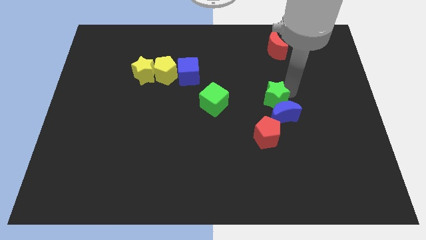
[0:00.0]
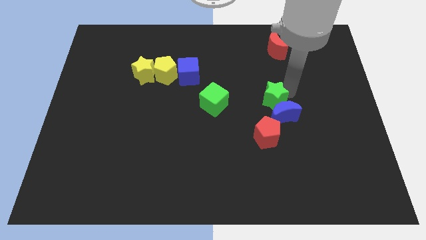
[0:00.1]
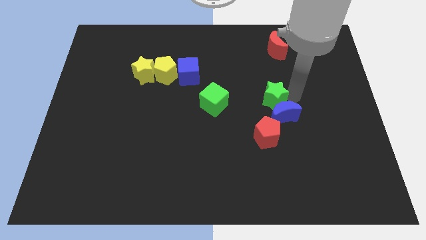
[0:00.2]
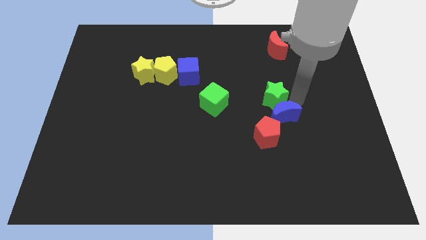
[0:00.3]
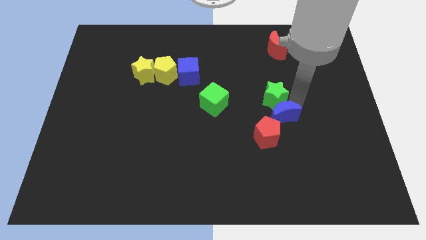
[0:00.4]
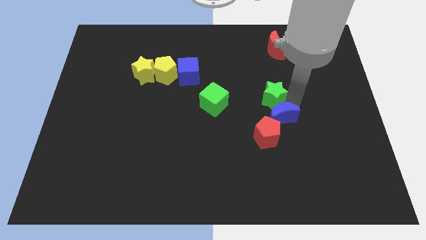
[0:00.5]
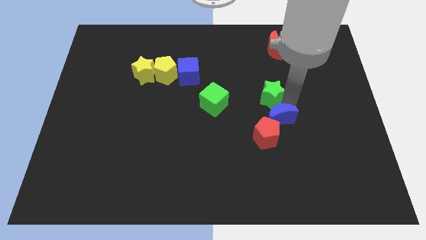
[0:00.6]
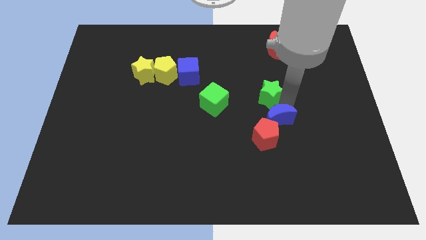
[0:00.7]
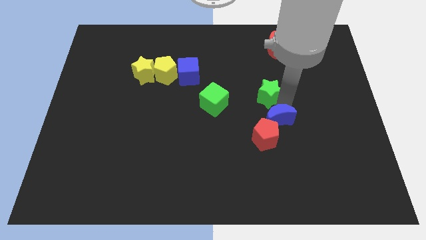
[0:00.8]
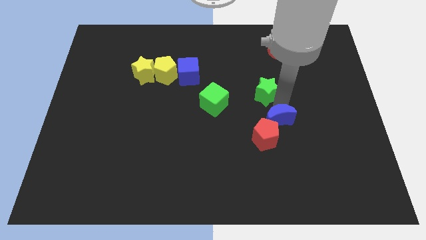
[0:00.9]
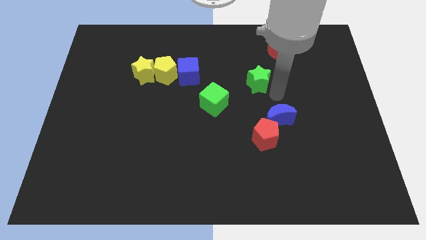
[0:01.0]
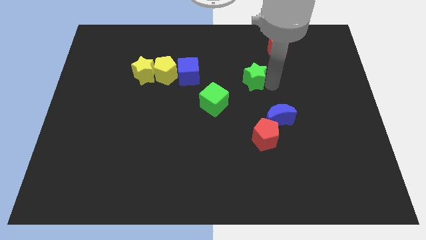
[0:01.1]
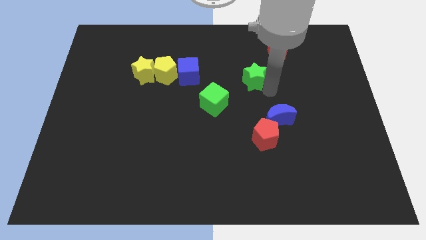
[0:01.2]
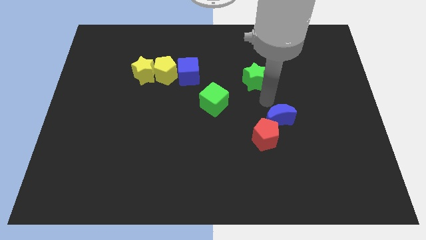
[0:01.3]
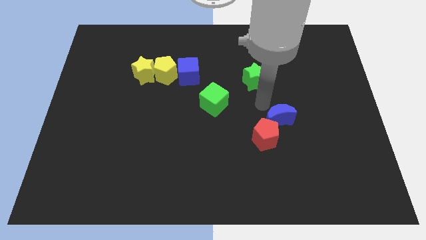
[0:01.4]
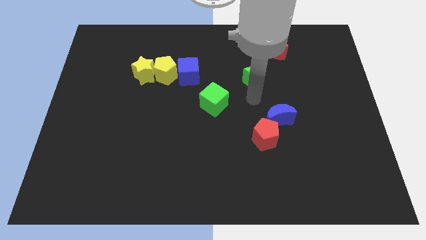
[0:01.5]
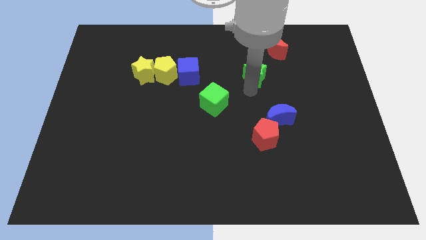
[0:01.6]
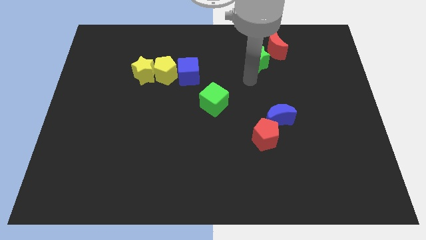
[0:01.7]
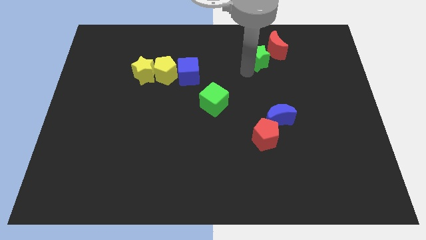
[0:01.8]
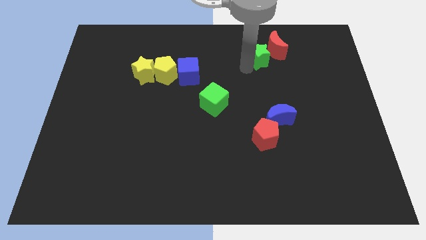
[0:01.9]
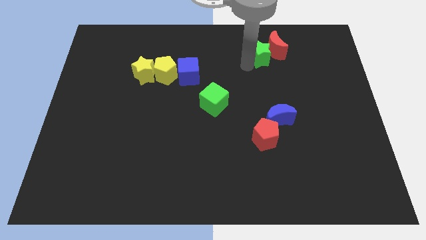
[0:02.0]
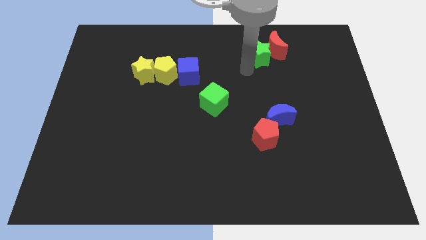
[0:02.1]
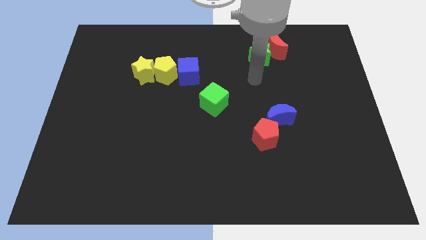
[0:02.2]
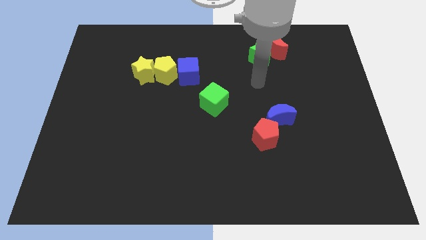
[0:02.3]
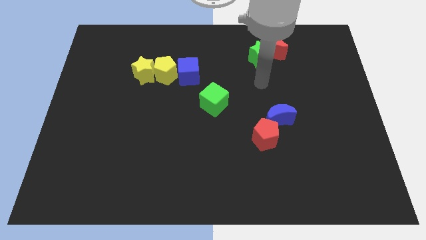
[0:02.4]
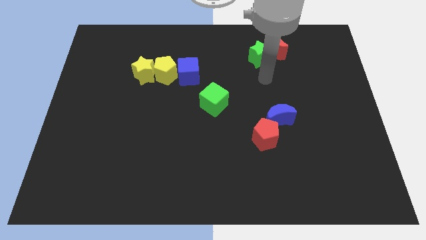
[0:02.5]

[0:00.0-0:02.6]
move the green star near to the red moon

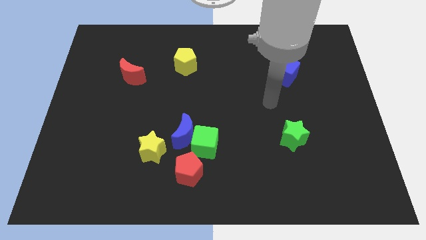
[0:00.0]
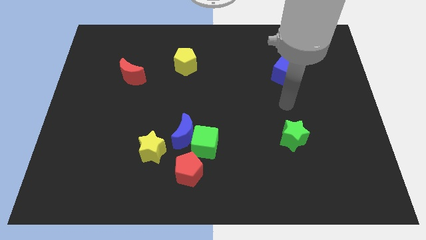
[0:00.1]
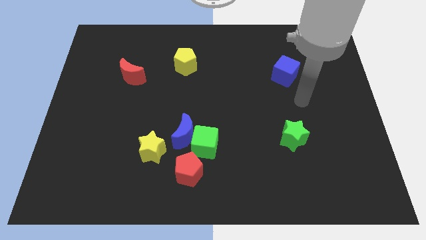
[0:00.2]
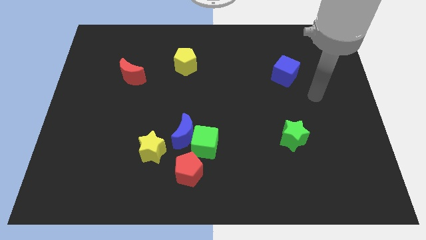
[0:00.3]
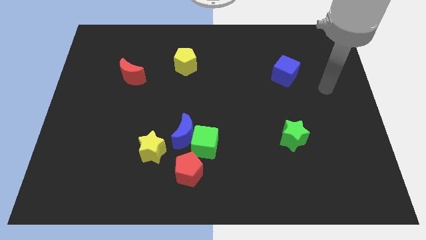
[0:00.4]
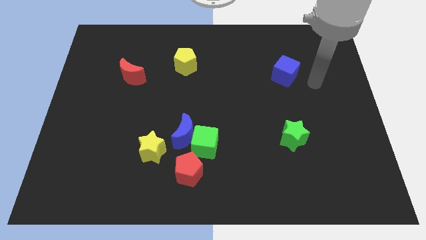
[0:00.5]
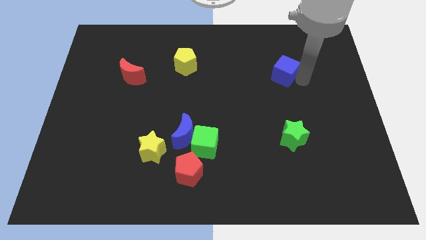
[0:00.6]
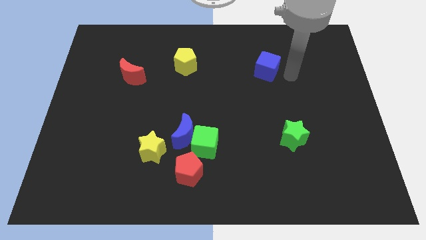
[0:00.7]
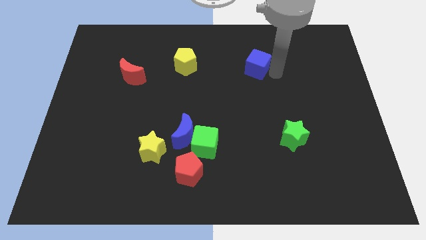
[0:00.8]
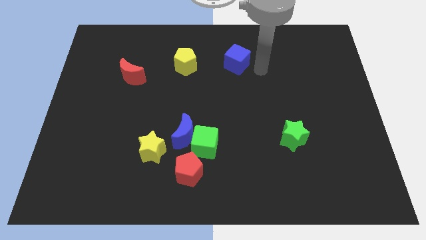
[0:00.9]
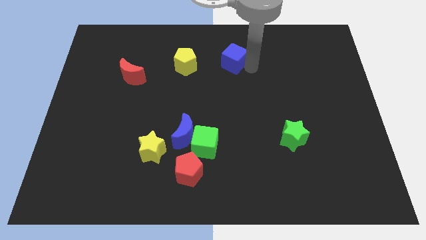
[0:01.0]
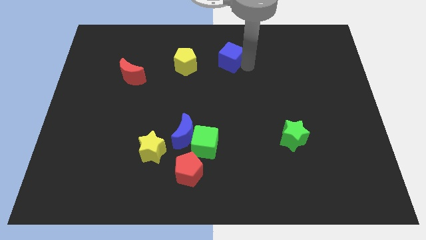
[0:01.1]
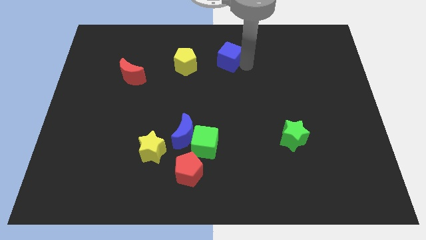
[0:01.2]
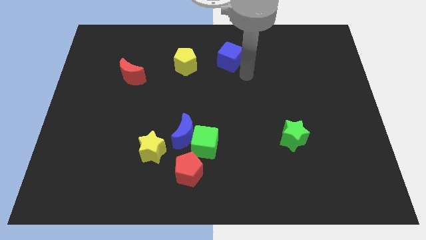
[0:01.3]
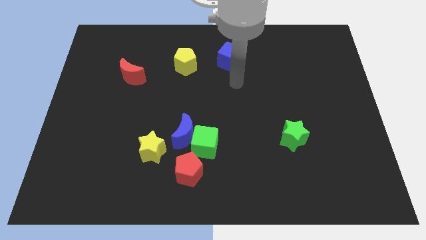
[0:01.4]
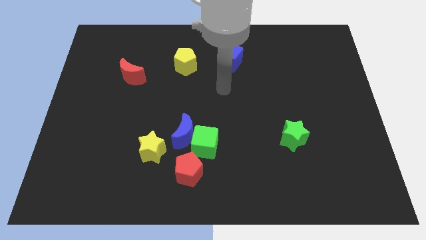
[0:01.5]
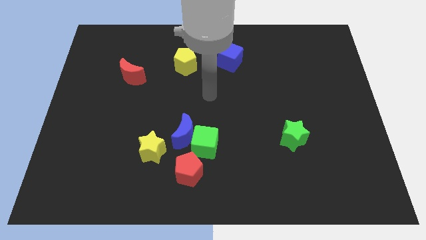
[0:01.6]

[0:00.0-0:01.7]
drag the blue cube towards the top center of the board

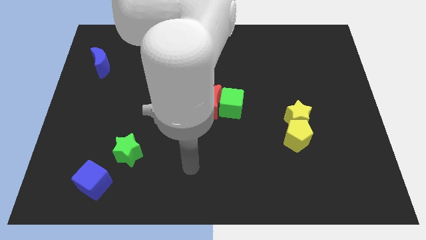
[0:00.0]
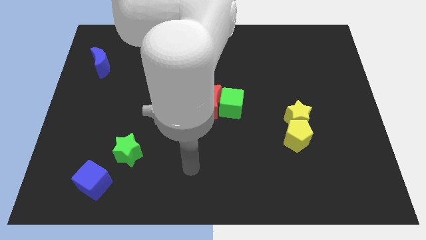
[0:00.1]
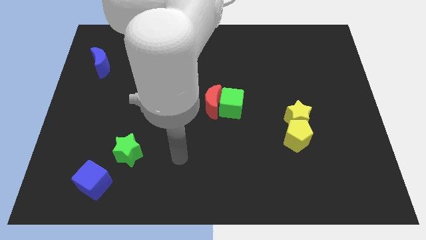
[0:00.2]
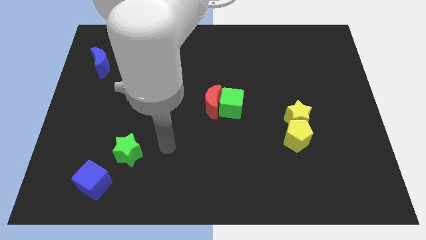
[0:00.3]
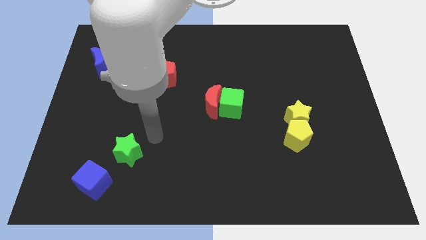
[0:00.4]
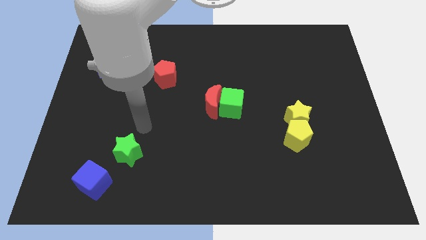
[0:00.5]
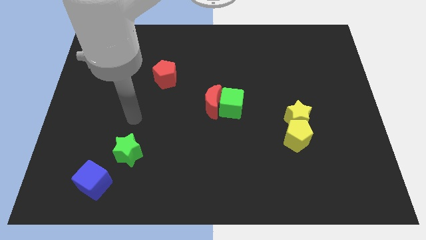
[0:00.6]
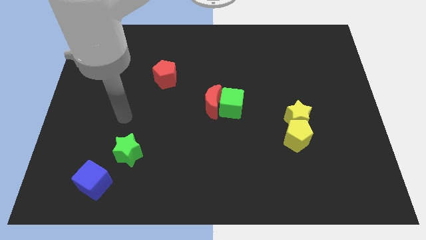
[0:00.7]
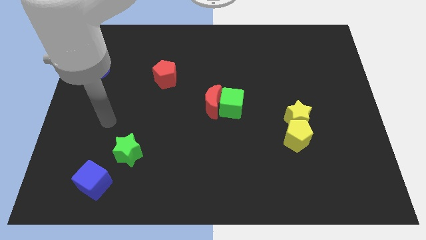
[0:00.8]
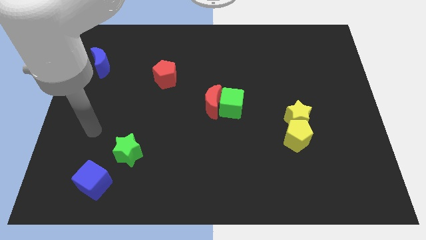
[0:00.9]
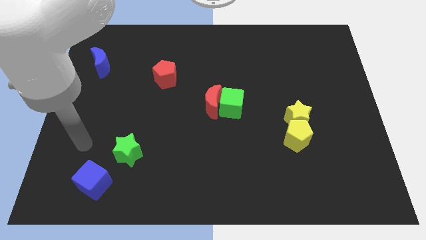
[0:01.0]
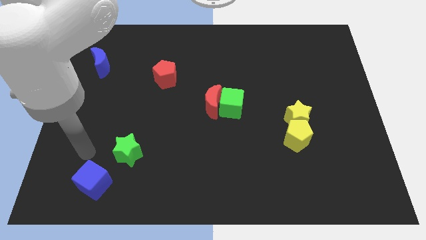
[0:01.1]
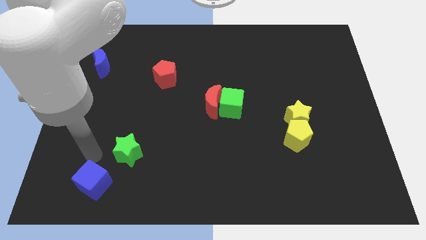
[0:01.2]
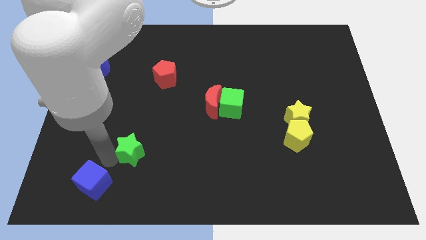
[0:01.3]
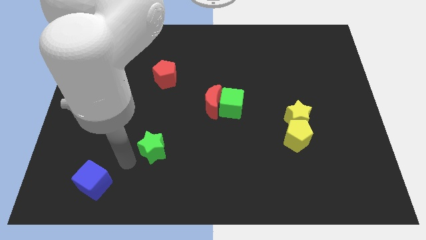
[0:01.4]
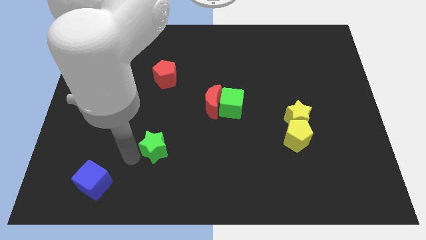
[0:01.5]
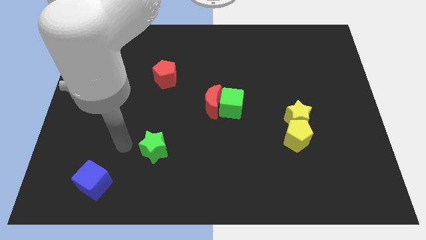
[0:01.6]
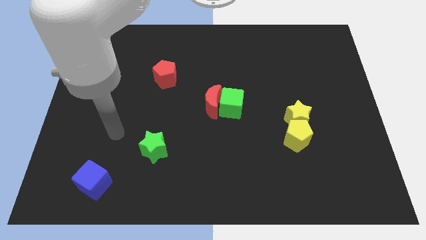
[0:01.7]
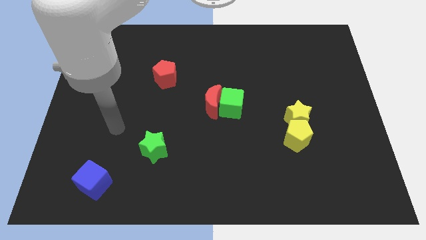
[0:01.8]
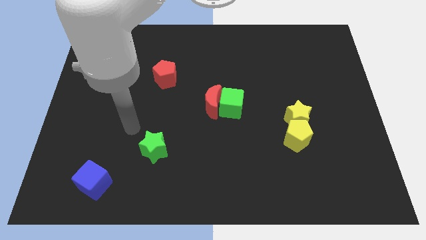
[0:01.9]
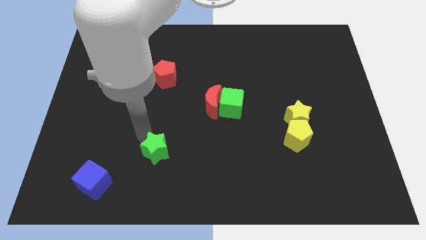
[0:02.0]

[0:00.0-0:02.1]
move the green star slightly to the bottom

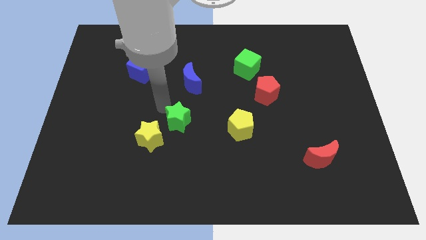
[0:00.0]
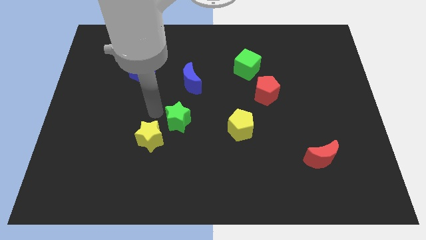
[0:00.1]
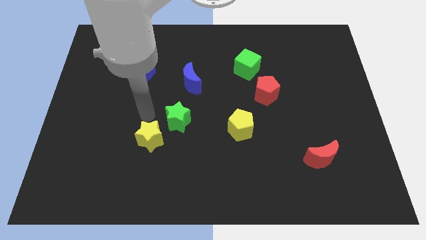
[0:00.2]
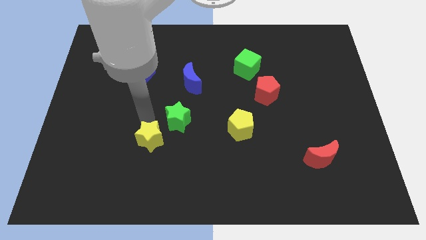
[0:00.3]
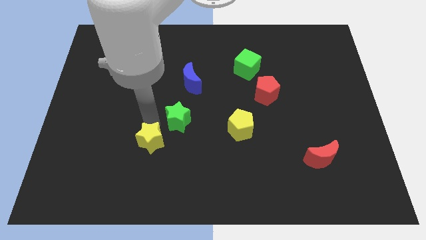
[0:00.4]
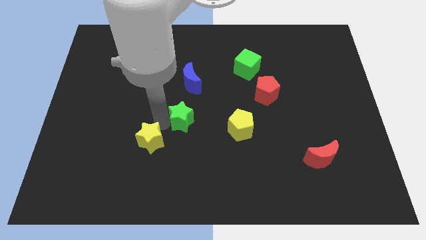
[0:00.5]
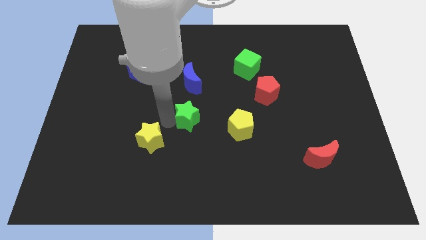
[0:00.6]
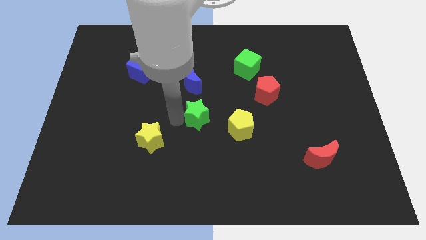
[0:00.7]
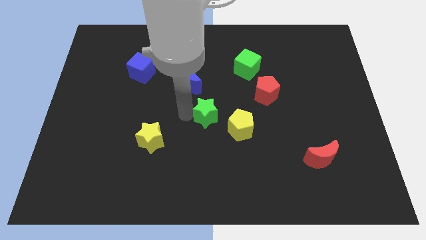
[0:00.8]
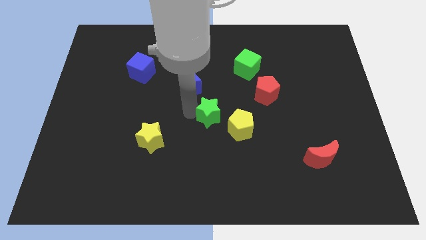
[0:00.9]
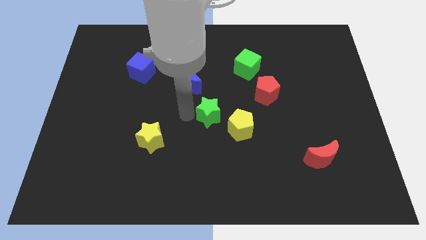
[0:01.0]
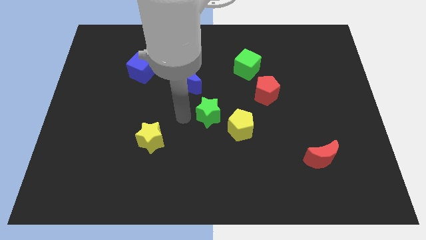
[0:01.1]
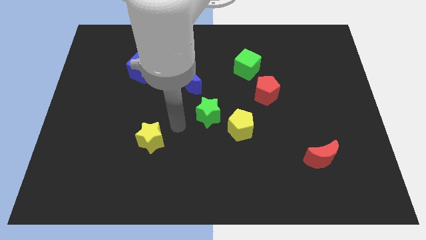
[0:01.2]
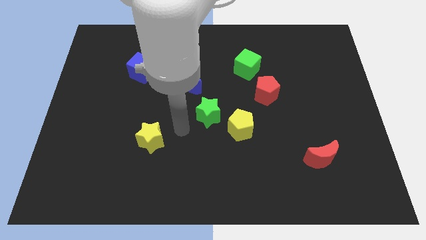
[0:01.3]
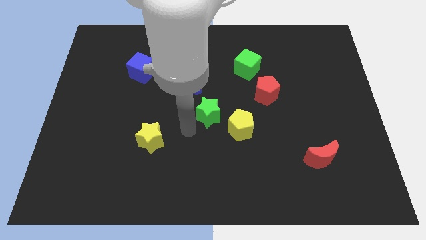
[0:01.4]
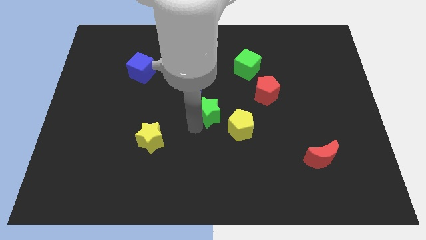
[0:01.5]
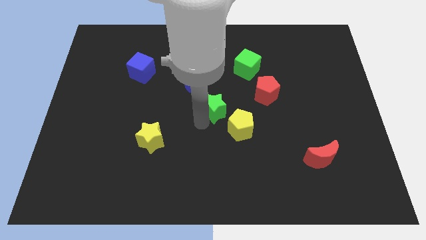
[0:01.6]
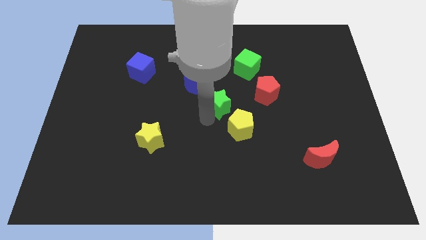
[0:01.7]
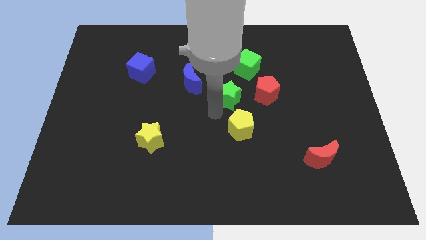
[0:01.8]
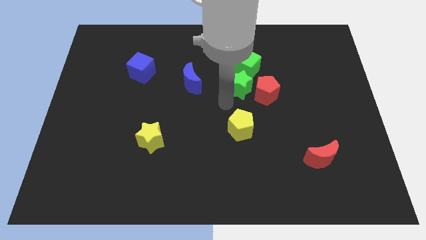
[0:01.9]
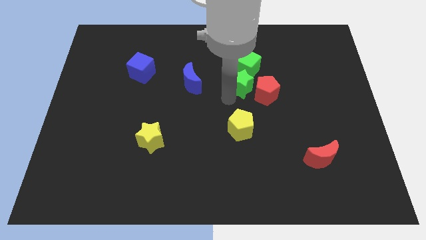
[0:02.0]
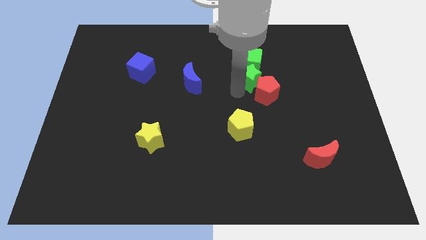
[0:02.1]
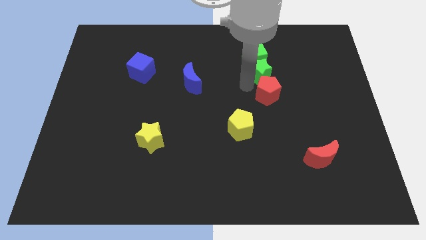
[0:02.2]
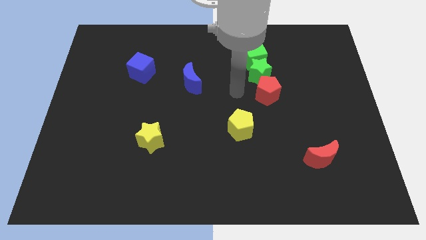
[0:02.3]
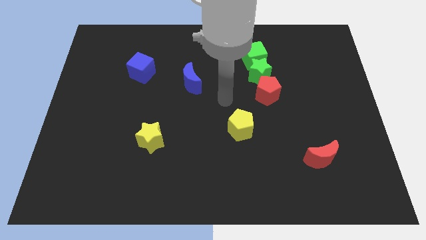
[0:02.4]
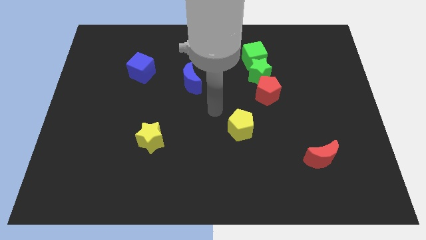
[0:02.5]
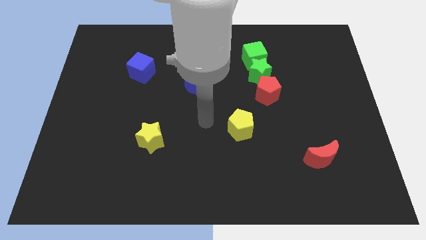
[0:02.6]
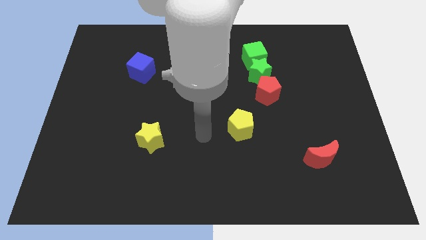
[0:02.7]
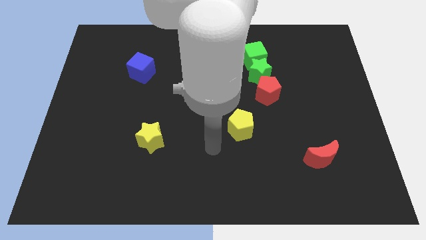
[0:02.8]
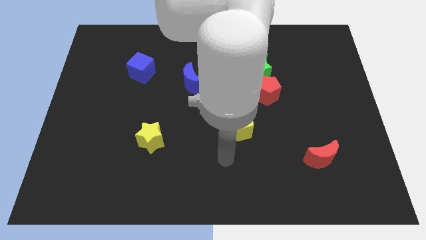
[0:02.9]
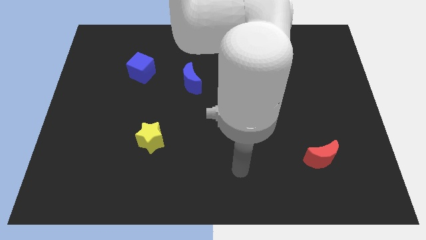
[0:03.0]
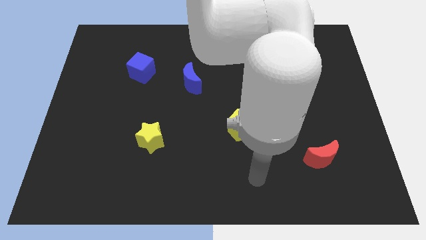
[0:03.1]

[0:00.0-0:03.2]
push the green star into green cube
